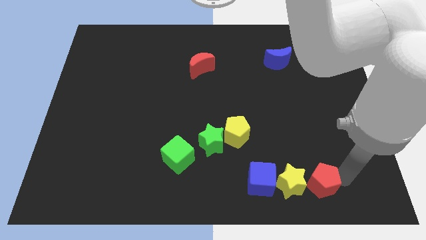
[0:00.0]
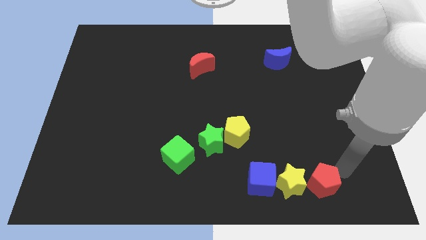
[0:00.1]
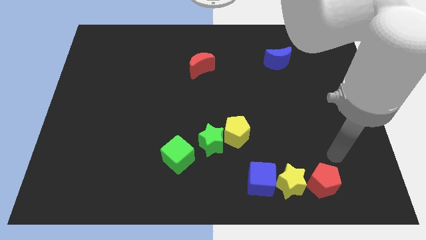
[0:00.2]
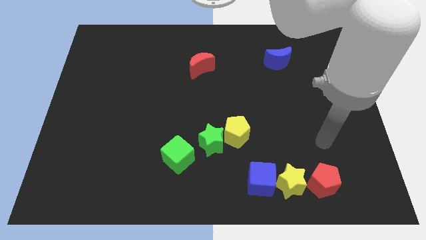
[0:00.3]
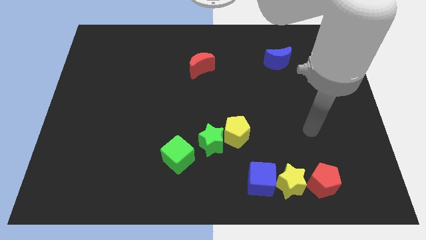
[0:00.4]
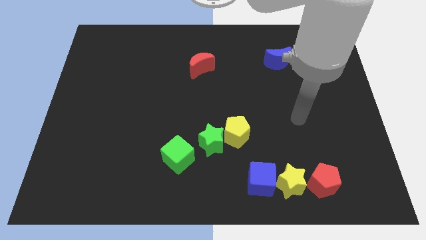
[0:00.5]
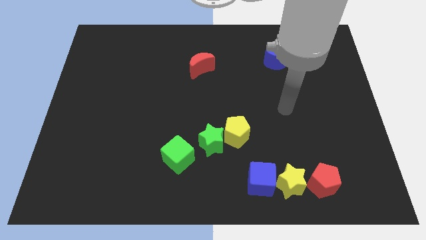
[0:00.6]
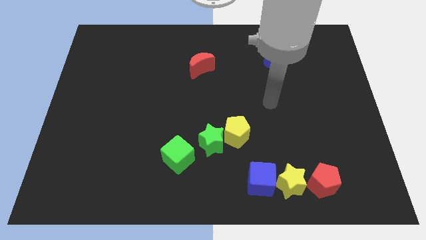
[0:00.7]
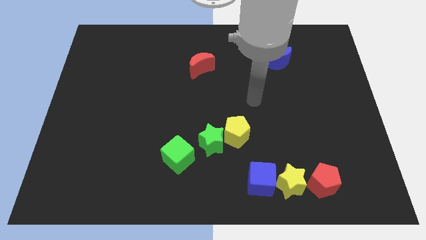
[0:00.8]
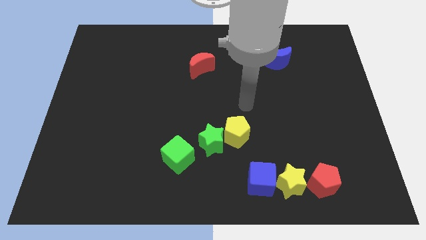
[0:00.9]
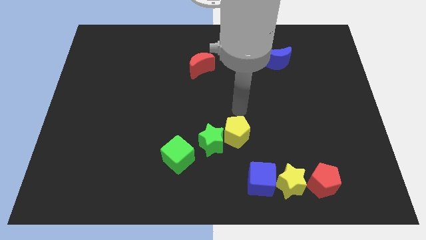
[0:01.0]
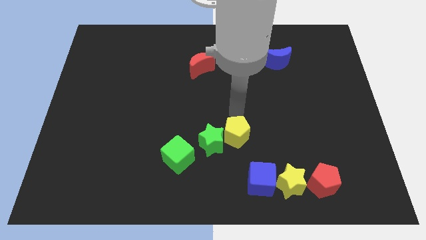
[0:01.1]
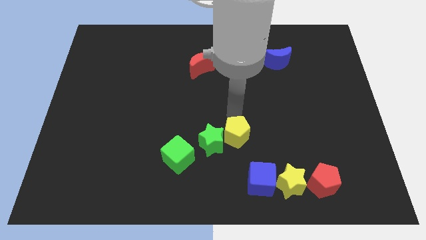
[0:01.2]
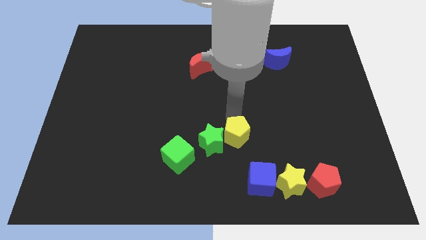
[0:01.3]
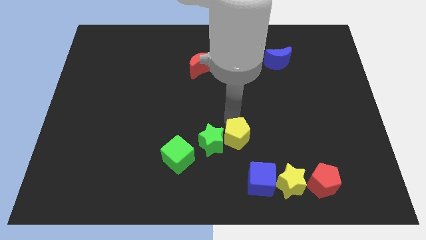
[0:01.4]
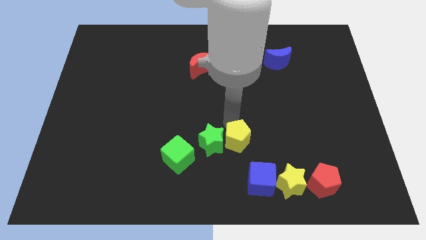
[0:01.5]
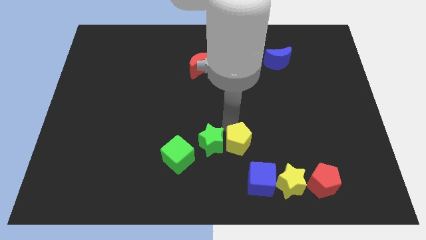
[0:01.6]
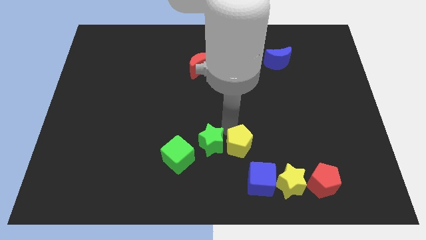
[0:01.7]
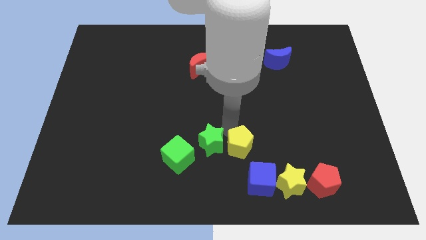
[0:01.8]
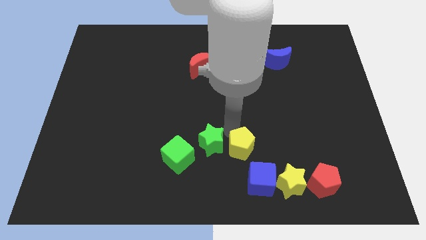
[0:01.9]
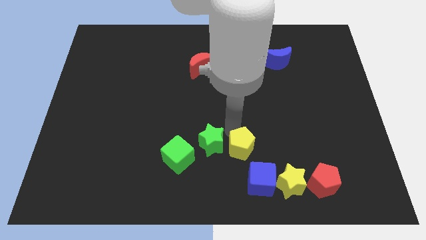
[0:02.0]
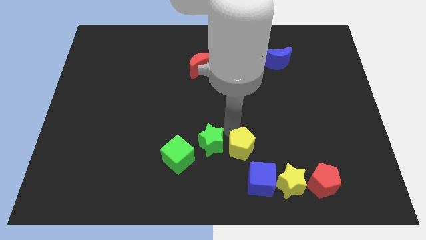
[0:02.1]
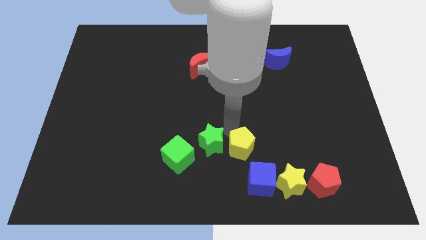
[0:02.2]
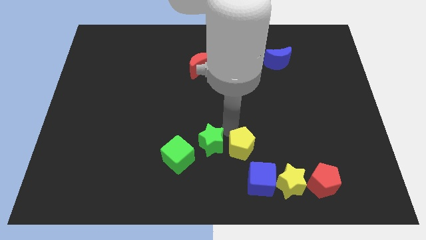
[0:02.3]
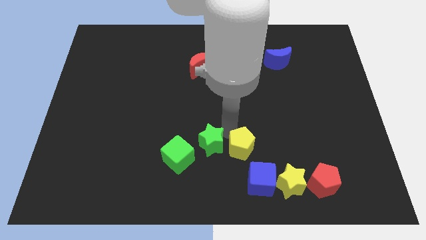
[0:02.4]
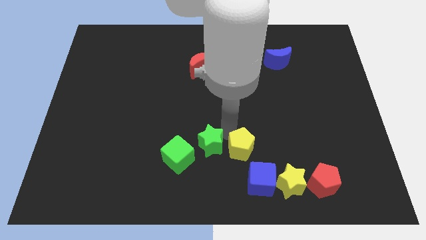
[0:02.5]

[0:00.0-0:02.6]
slide the yellow pentagon towards the bottom

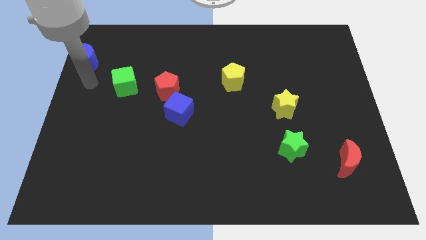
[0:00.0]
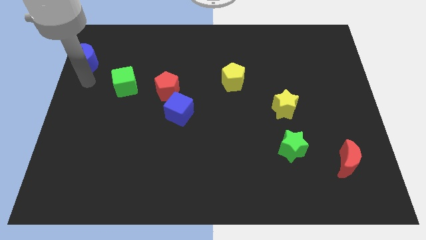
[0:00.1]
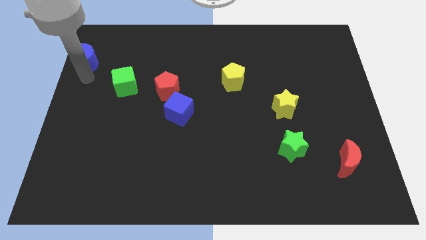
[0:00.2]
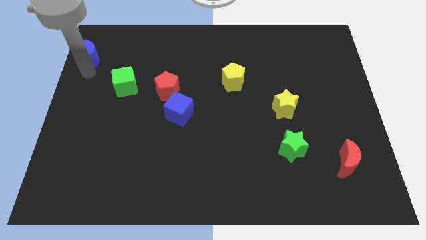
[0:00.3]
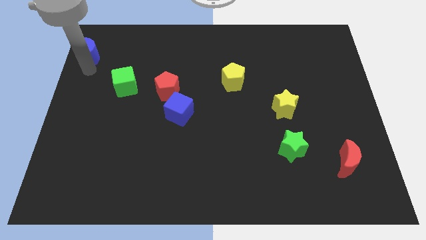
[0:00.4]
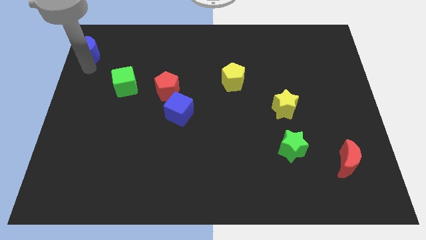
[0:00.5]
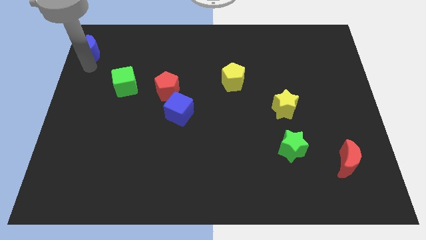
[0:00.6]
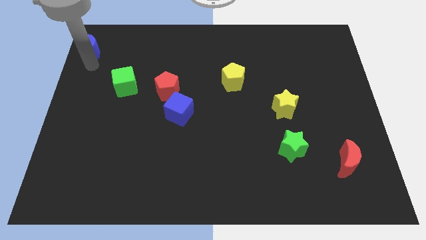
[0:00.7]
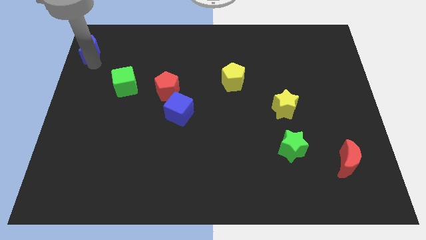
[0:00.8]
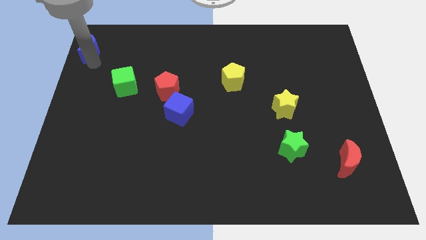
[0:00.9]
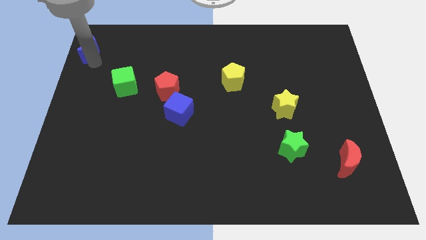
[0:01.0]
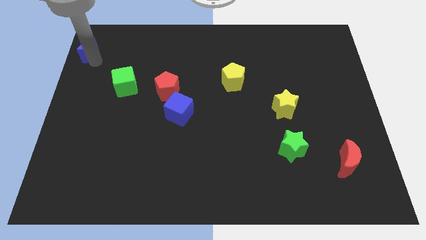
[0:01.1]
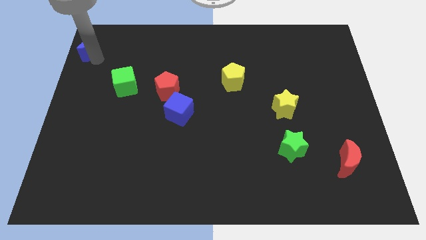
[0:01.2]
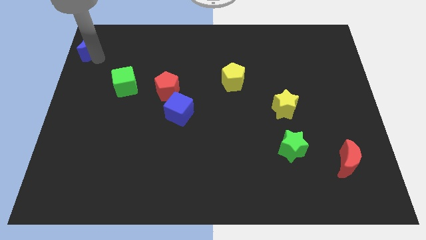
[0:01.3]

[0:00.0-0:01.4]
push the blue crescent slightly towards up

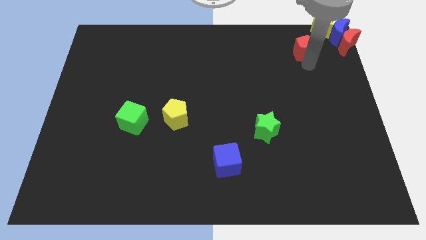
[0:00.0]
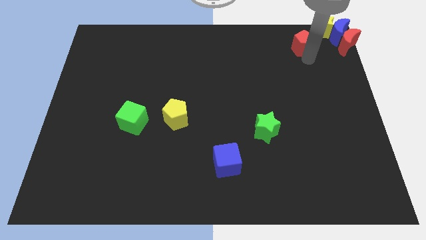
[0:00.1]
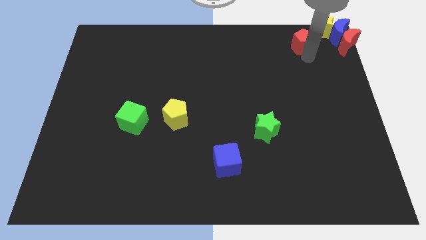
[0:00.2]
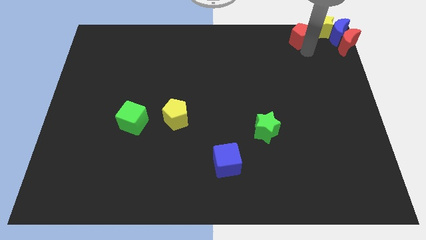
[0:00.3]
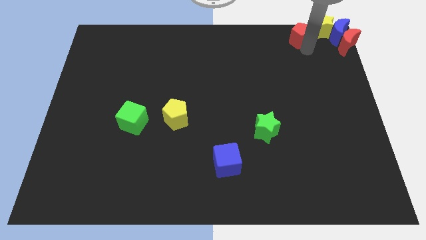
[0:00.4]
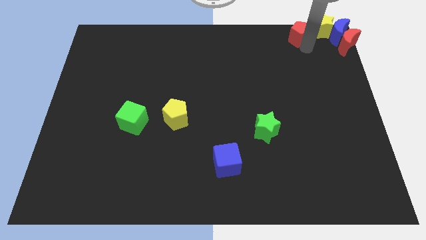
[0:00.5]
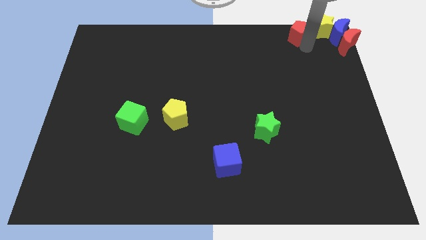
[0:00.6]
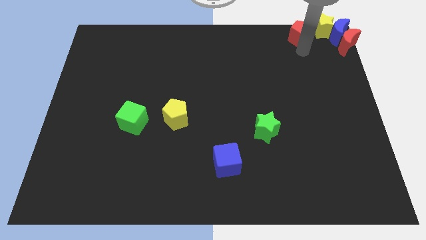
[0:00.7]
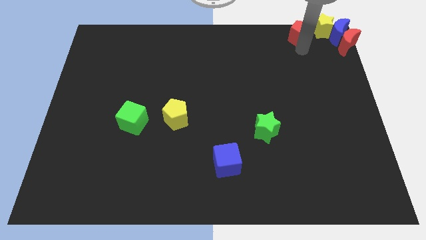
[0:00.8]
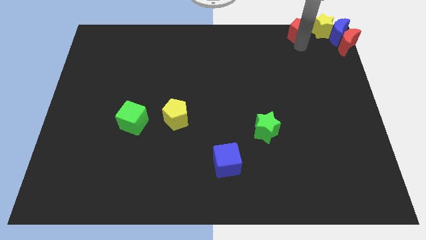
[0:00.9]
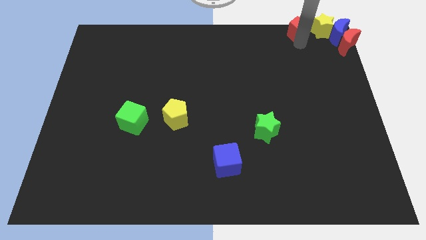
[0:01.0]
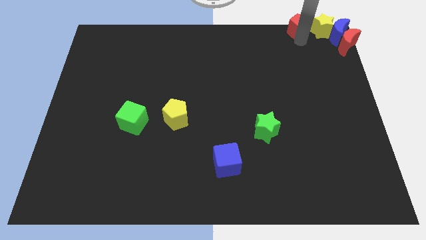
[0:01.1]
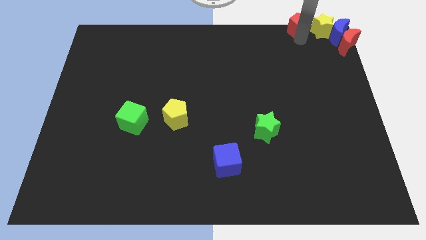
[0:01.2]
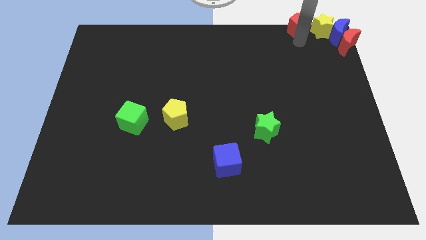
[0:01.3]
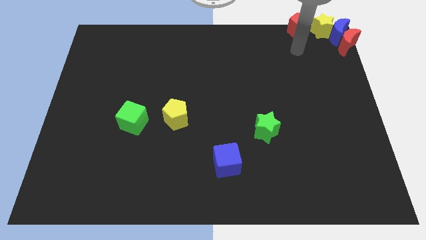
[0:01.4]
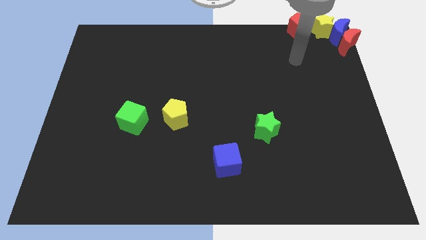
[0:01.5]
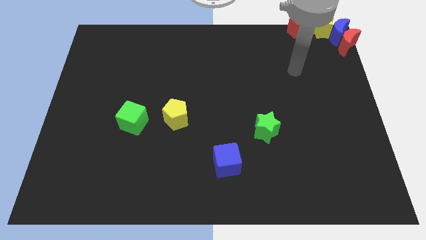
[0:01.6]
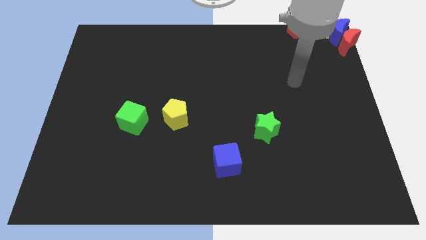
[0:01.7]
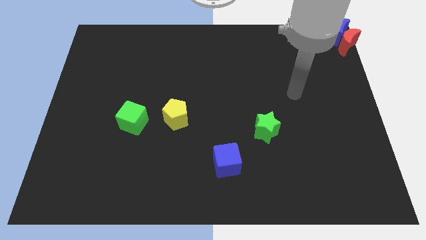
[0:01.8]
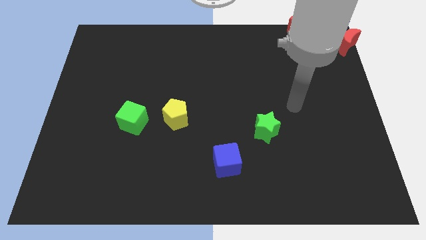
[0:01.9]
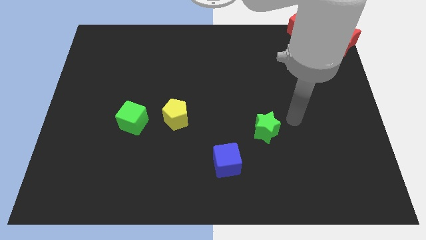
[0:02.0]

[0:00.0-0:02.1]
push the red pentagon to the left of yellow star

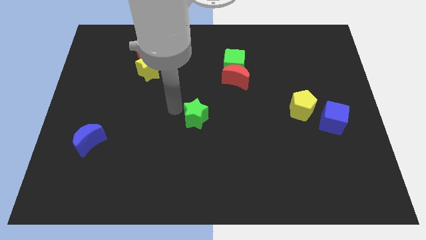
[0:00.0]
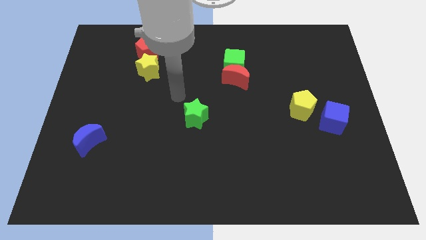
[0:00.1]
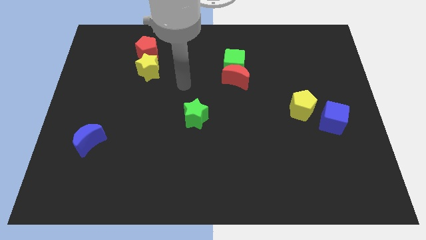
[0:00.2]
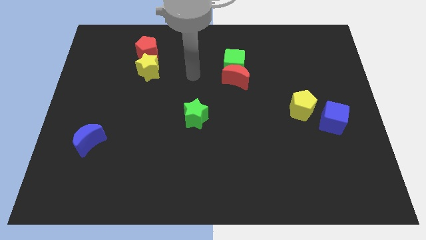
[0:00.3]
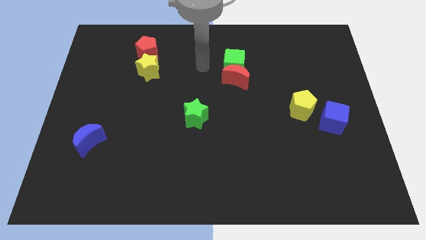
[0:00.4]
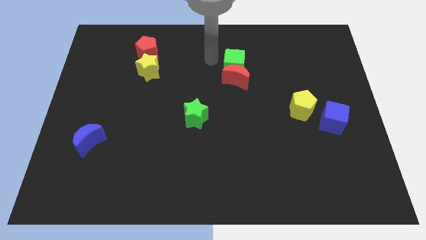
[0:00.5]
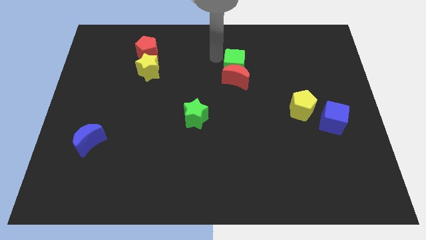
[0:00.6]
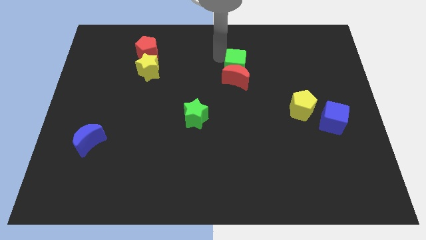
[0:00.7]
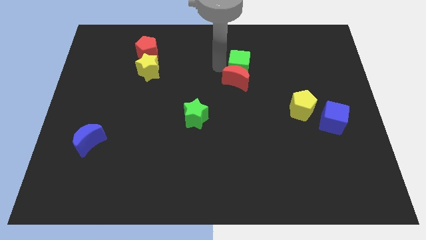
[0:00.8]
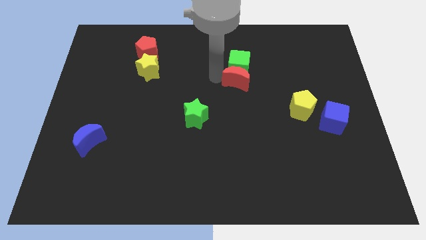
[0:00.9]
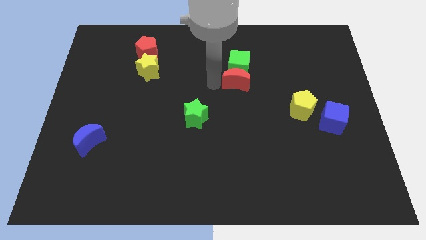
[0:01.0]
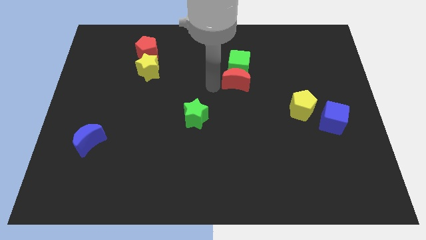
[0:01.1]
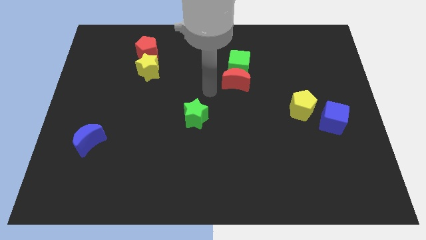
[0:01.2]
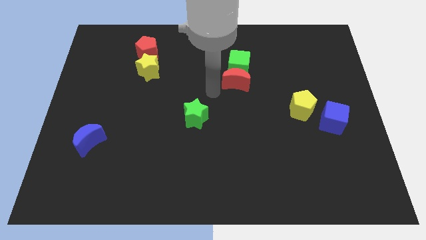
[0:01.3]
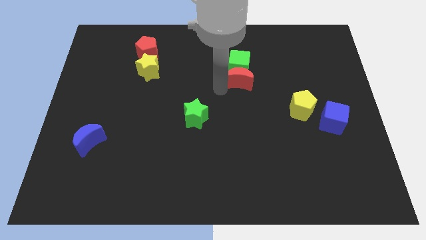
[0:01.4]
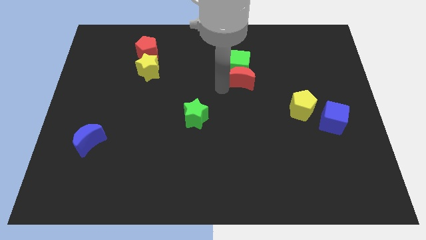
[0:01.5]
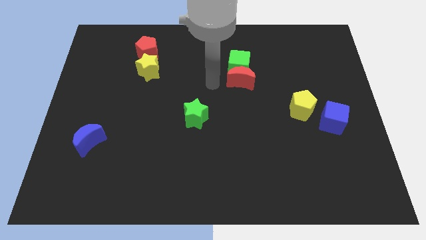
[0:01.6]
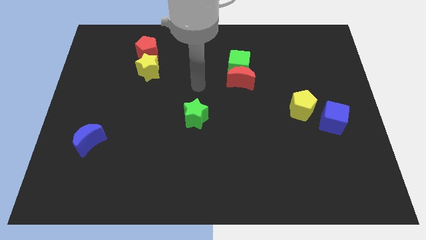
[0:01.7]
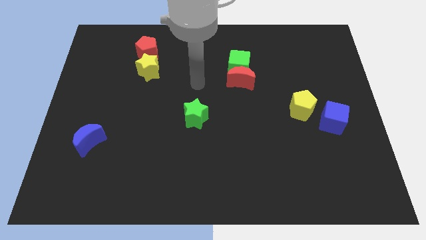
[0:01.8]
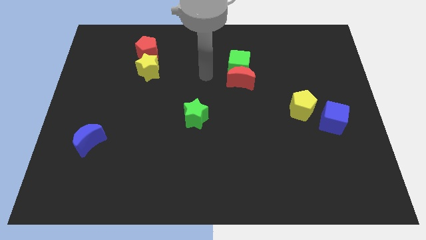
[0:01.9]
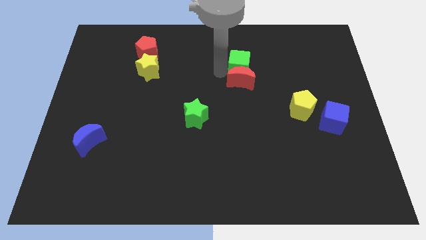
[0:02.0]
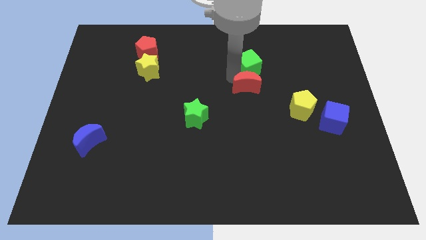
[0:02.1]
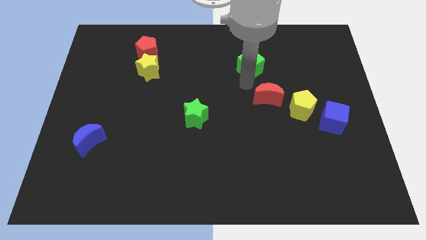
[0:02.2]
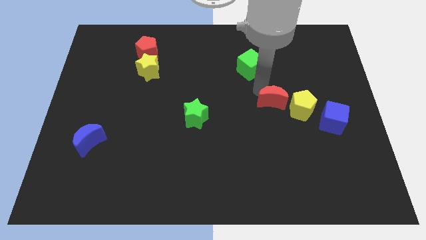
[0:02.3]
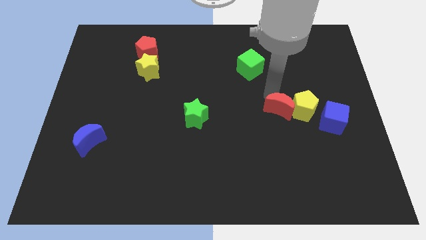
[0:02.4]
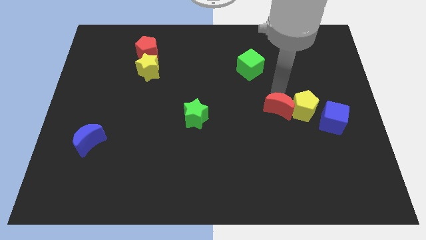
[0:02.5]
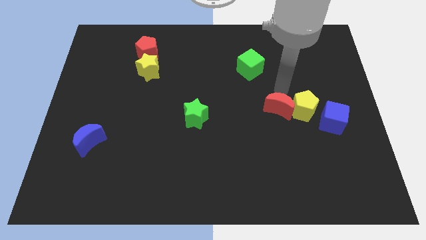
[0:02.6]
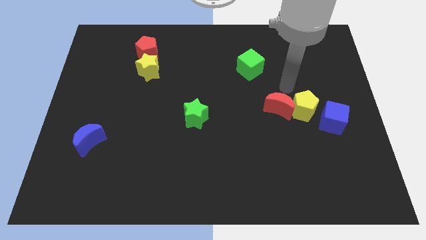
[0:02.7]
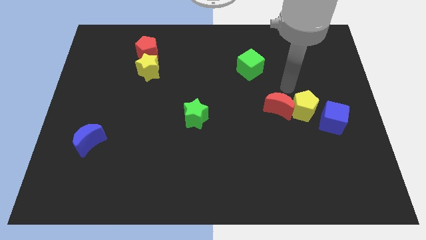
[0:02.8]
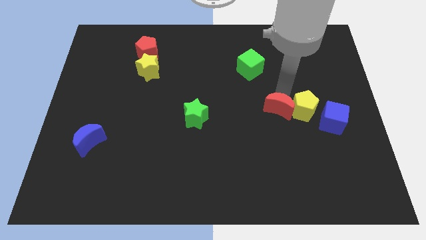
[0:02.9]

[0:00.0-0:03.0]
move the red crescent to the left of the yellow pentagon
